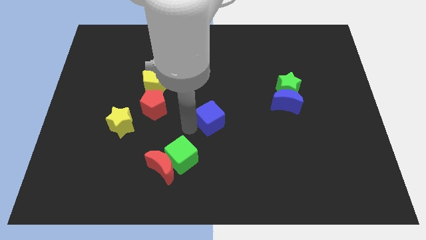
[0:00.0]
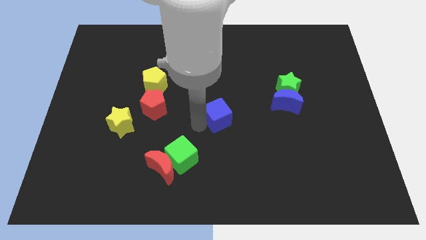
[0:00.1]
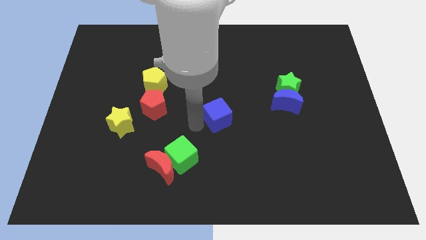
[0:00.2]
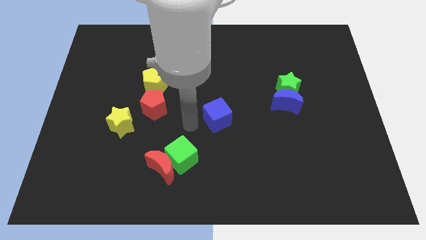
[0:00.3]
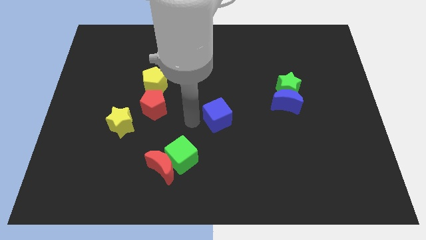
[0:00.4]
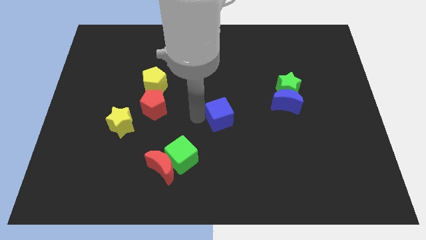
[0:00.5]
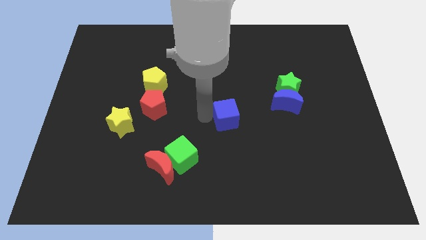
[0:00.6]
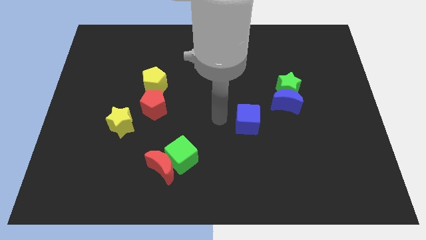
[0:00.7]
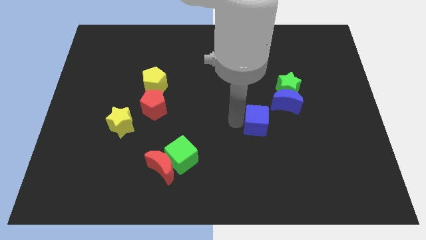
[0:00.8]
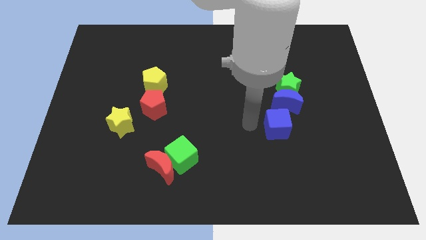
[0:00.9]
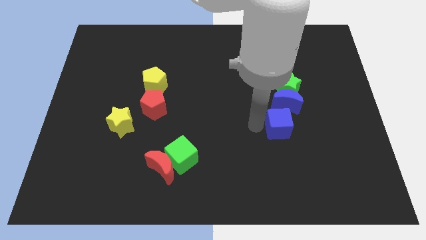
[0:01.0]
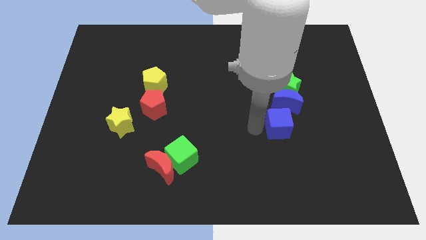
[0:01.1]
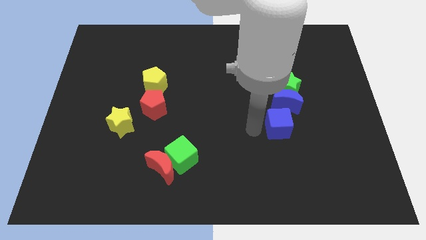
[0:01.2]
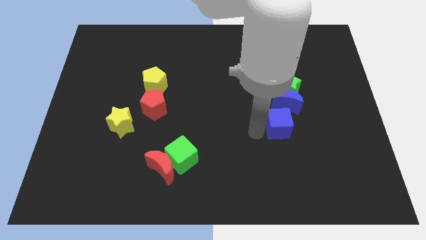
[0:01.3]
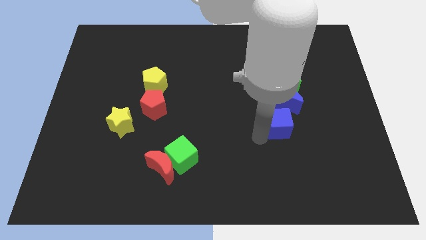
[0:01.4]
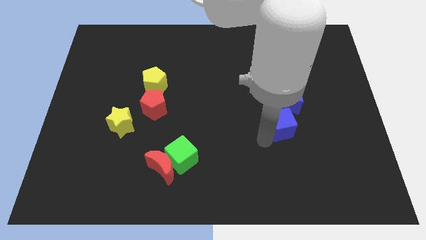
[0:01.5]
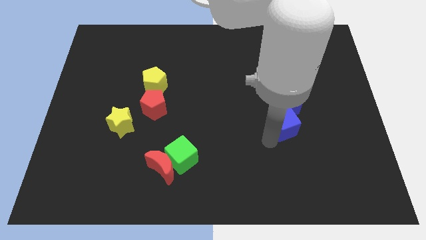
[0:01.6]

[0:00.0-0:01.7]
place the blue cube to the bottom of the blue moon

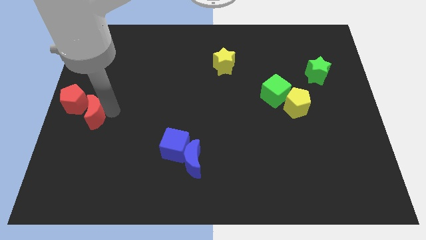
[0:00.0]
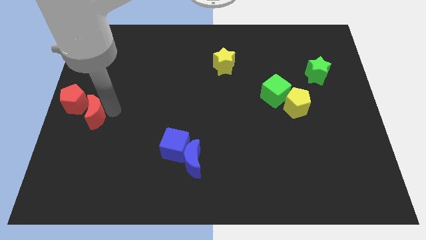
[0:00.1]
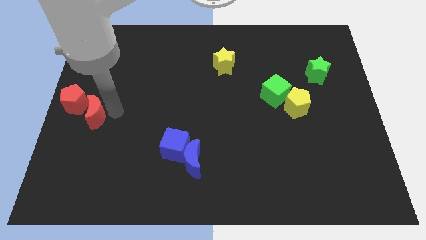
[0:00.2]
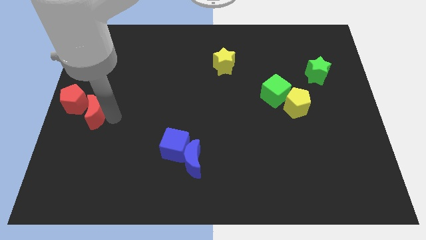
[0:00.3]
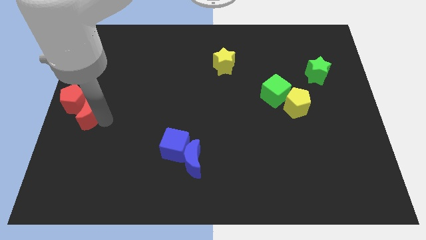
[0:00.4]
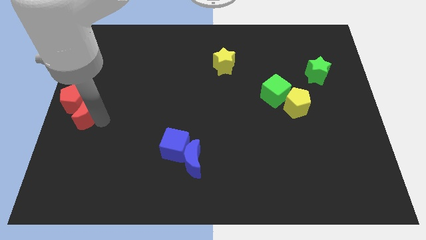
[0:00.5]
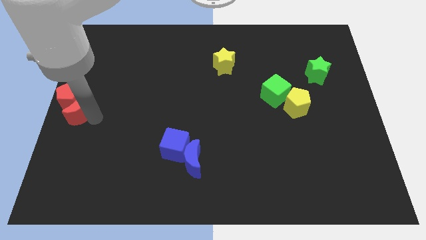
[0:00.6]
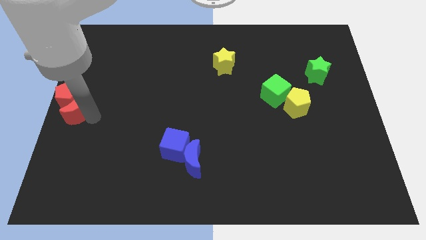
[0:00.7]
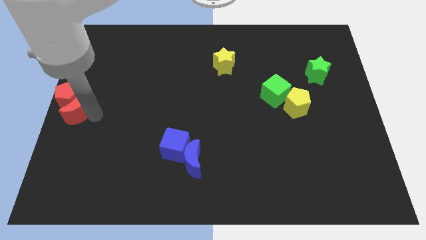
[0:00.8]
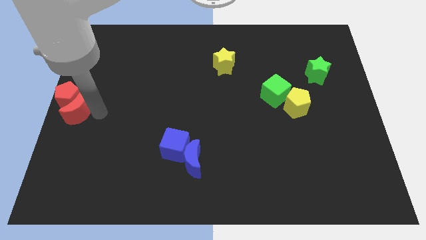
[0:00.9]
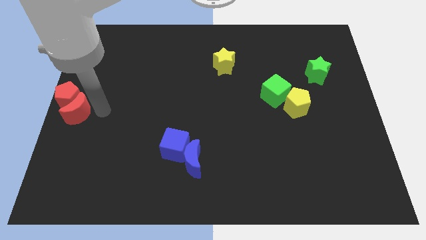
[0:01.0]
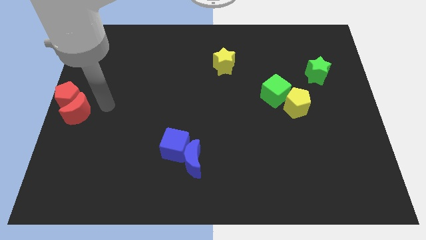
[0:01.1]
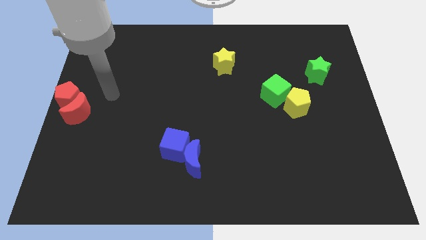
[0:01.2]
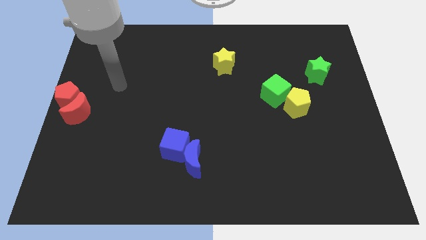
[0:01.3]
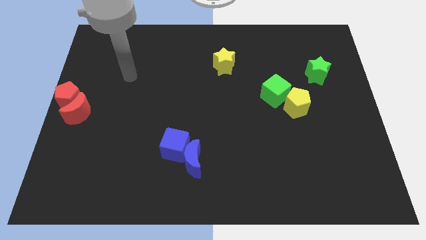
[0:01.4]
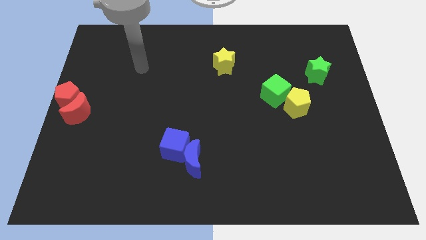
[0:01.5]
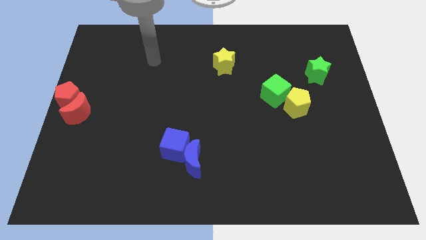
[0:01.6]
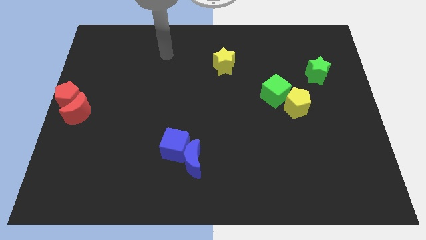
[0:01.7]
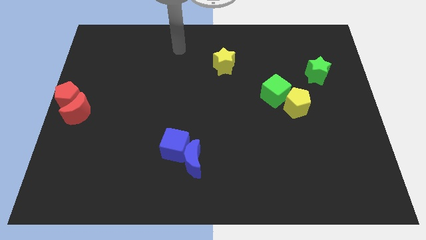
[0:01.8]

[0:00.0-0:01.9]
push the red moon into the red pentagon

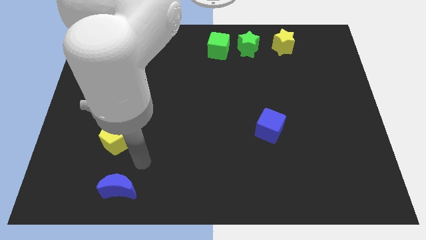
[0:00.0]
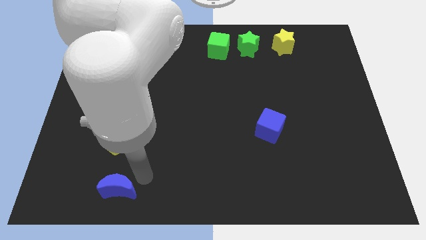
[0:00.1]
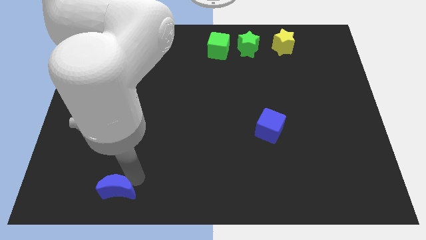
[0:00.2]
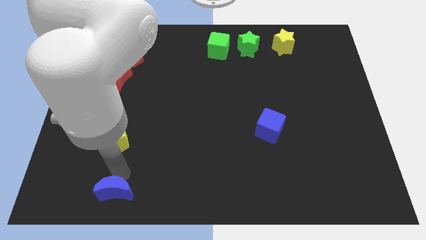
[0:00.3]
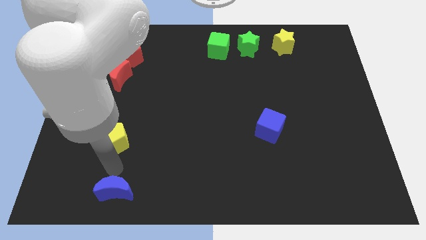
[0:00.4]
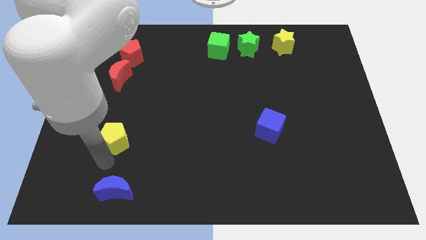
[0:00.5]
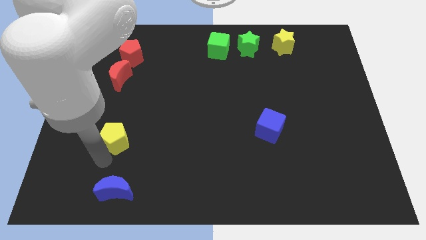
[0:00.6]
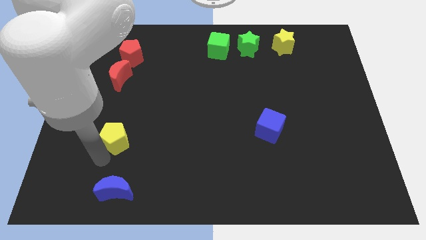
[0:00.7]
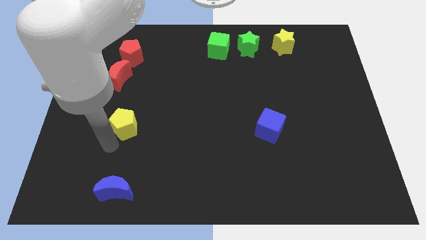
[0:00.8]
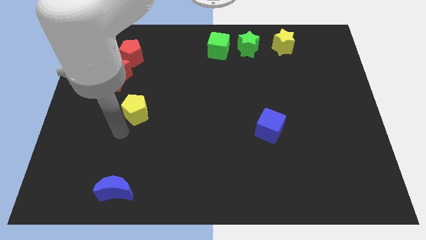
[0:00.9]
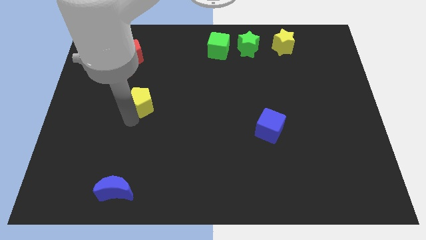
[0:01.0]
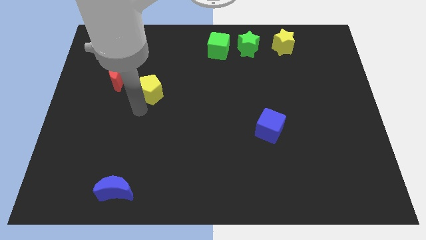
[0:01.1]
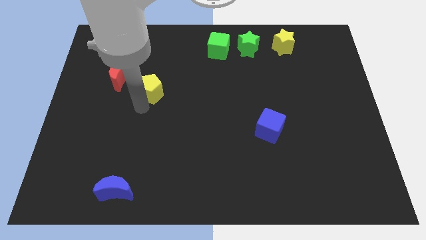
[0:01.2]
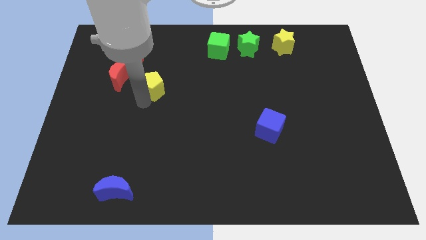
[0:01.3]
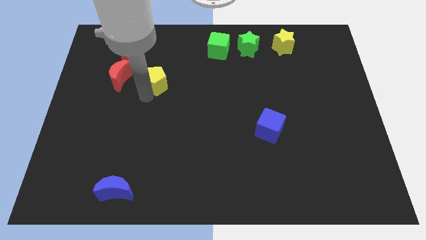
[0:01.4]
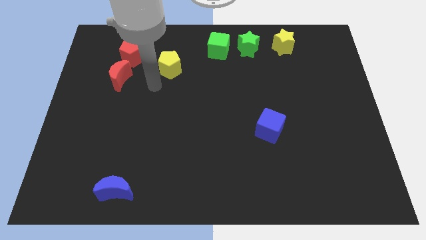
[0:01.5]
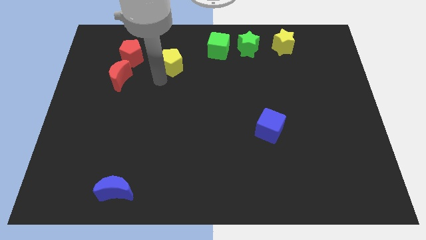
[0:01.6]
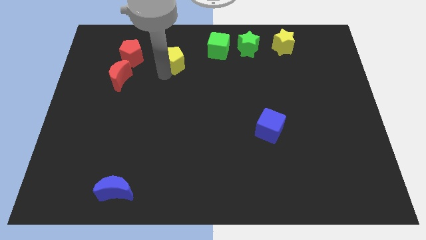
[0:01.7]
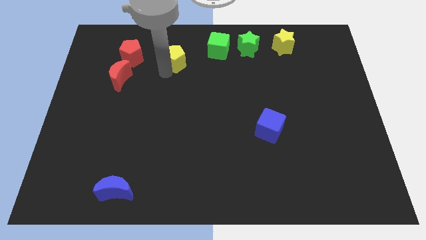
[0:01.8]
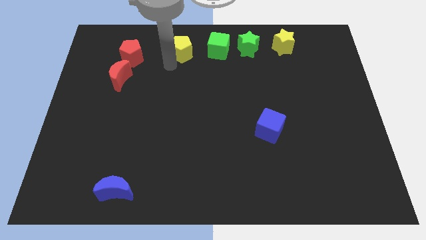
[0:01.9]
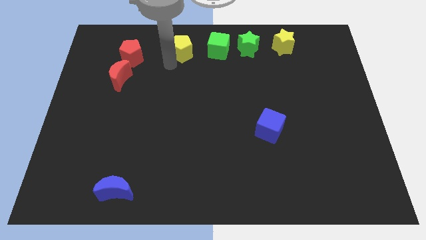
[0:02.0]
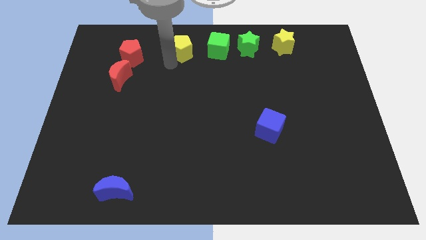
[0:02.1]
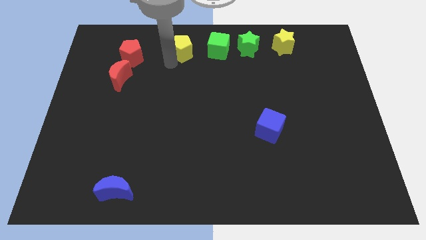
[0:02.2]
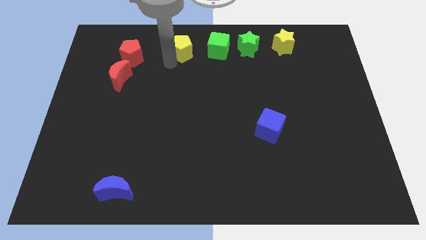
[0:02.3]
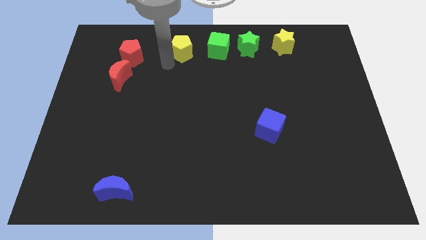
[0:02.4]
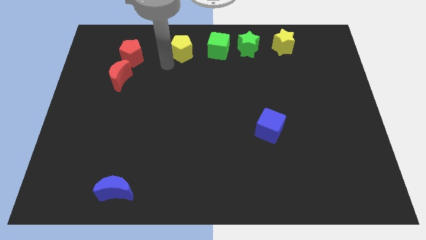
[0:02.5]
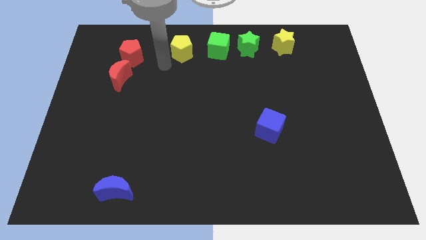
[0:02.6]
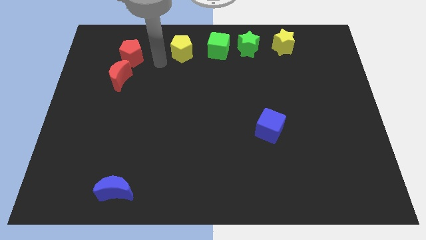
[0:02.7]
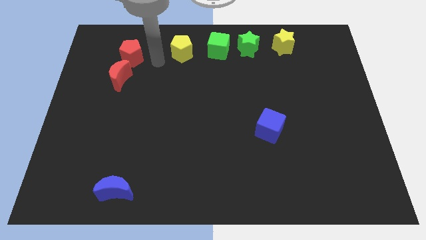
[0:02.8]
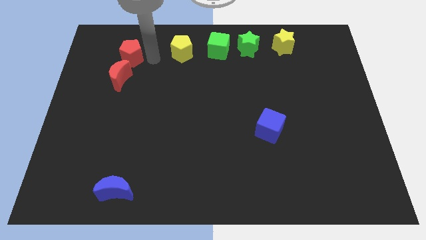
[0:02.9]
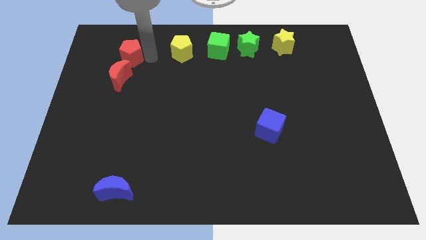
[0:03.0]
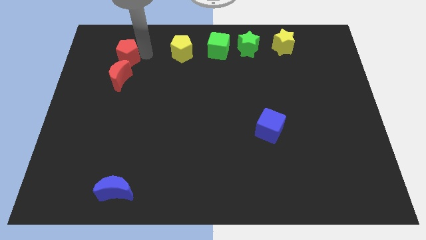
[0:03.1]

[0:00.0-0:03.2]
place the yellow pentagon on the left side of the green cube horizontally

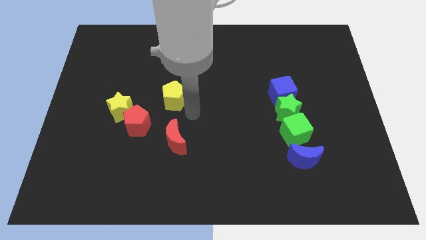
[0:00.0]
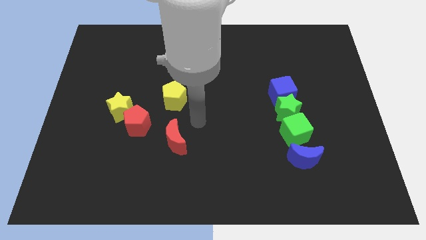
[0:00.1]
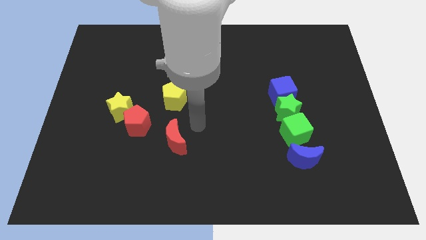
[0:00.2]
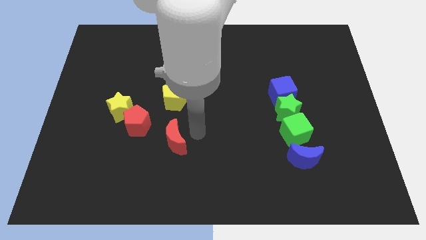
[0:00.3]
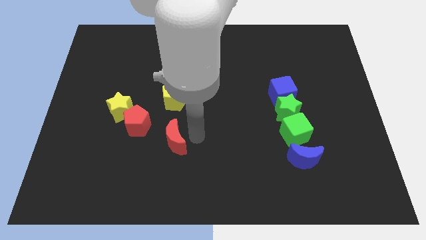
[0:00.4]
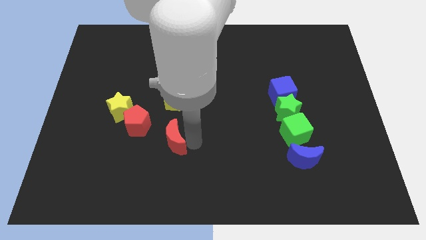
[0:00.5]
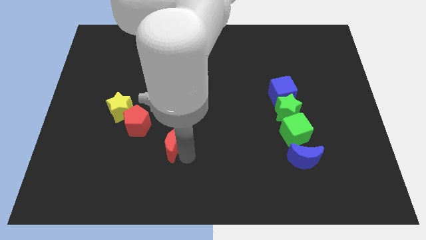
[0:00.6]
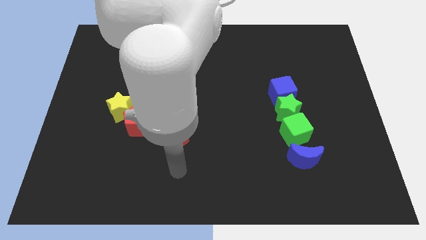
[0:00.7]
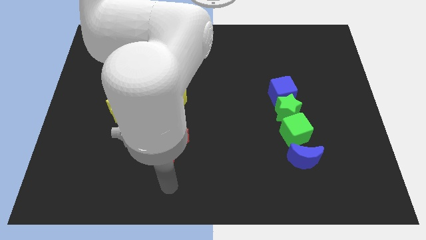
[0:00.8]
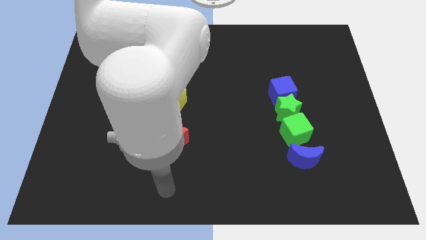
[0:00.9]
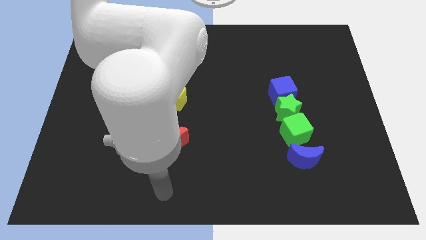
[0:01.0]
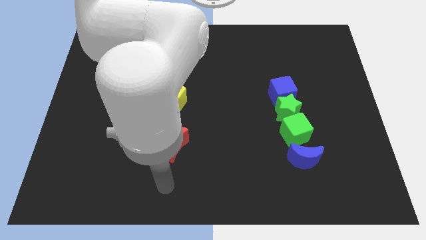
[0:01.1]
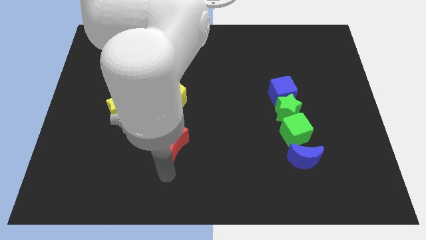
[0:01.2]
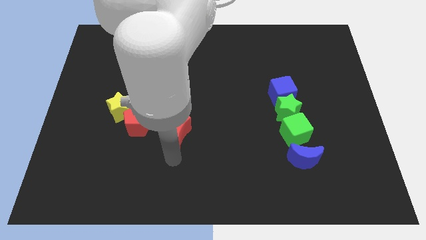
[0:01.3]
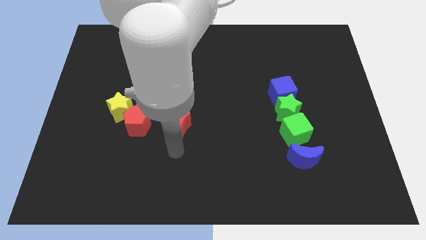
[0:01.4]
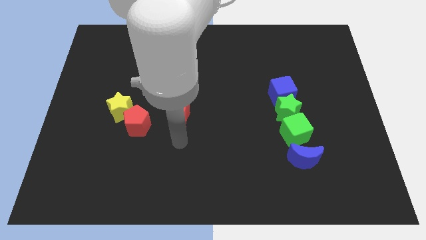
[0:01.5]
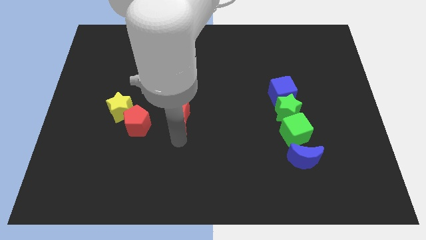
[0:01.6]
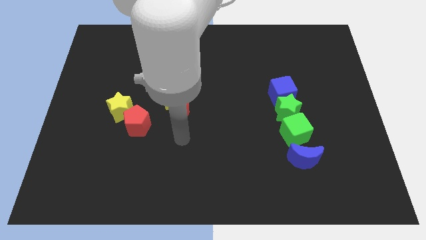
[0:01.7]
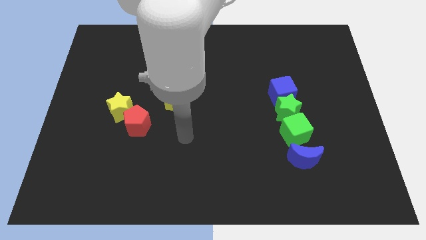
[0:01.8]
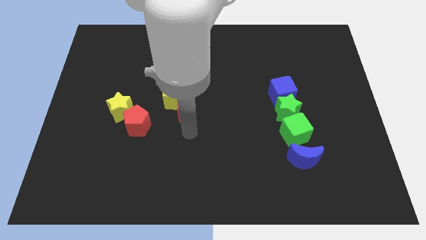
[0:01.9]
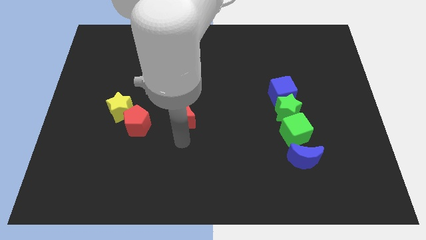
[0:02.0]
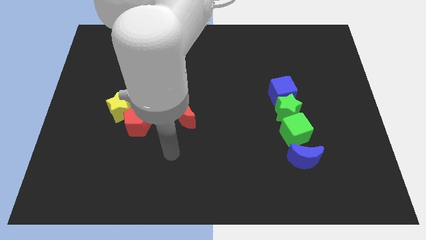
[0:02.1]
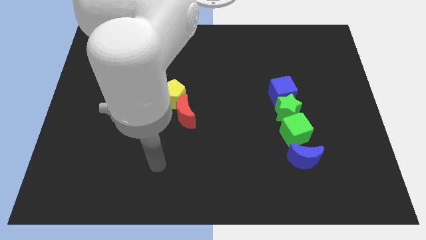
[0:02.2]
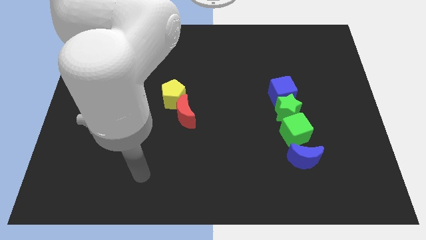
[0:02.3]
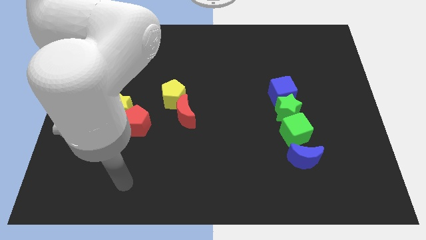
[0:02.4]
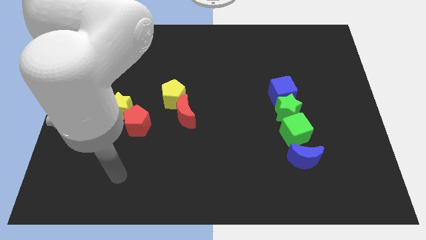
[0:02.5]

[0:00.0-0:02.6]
move the red moon below the yellow pentagon
